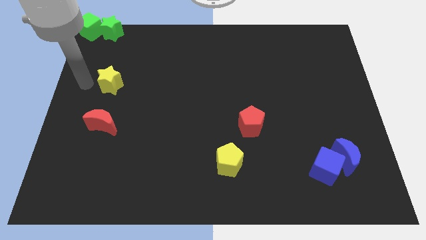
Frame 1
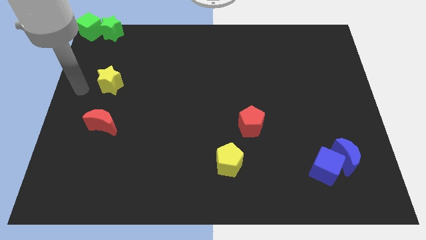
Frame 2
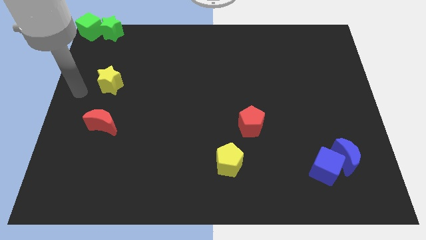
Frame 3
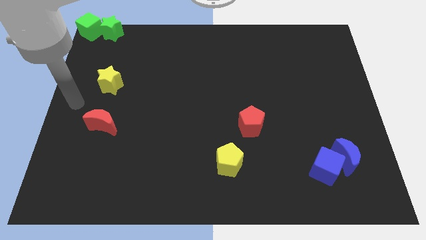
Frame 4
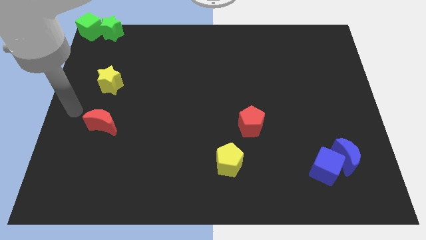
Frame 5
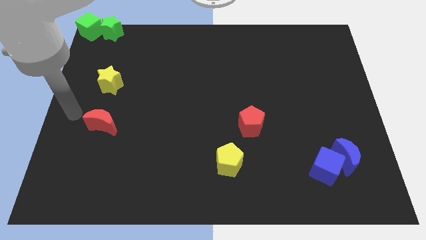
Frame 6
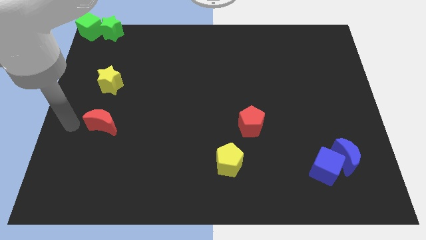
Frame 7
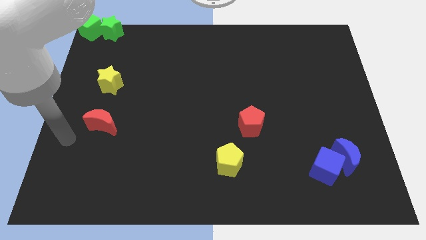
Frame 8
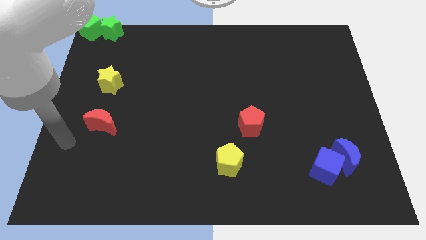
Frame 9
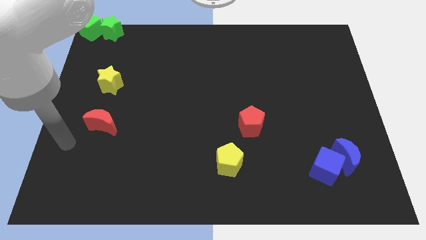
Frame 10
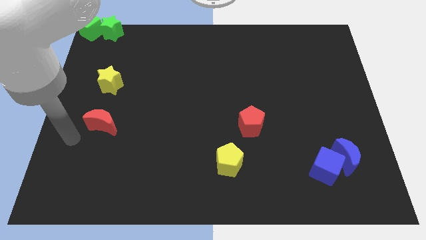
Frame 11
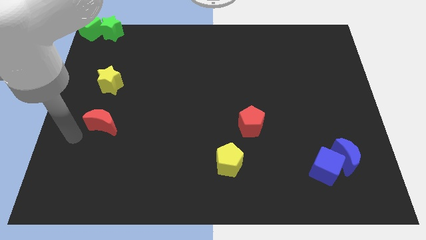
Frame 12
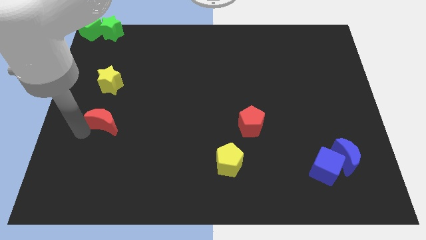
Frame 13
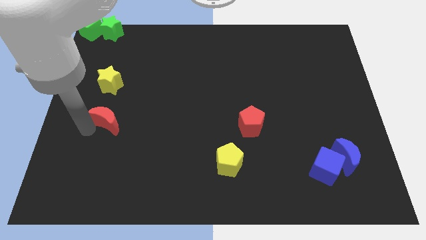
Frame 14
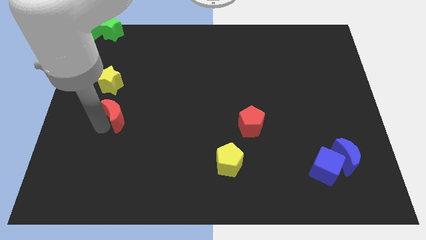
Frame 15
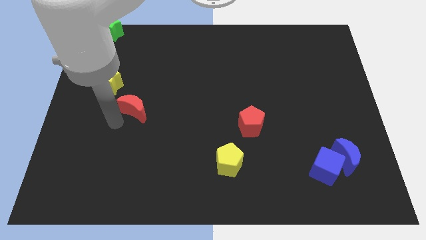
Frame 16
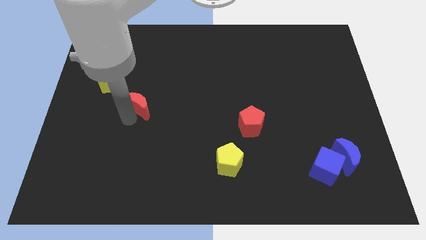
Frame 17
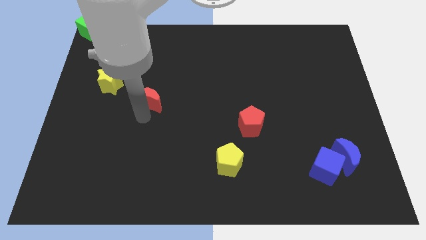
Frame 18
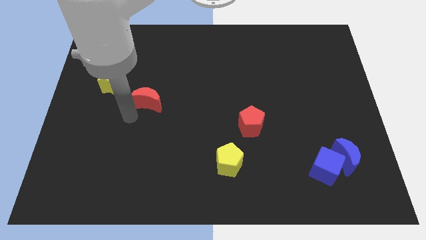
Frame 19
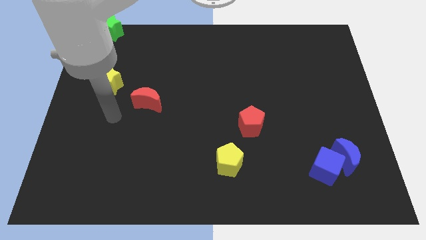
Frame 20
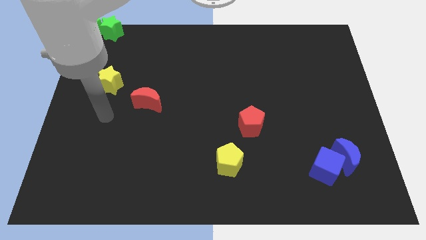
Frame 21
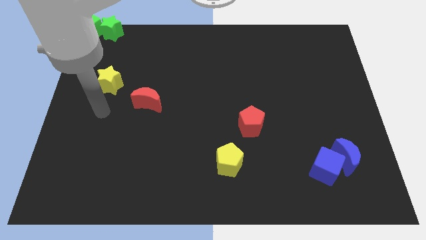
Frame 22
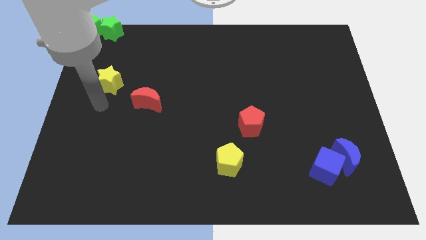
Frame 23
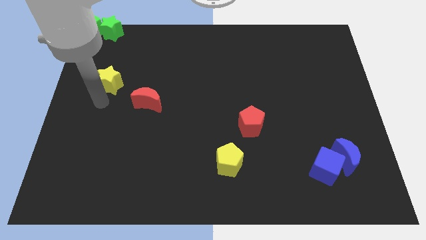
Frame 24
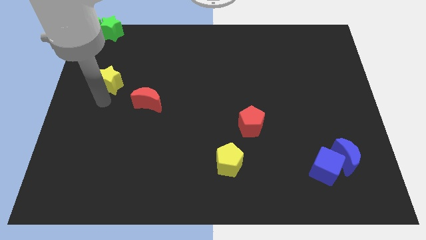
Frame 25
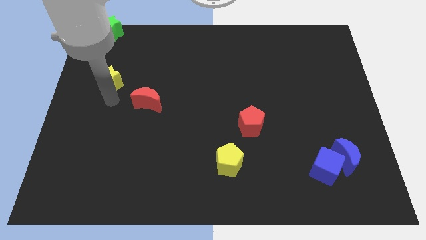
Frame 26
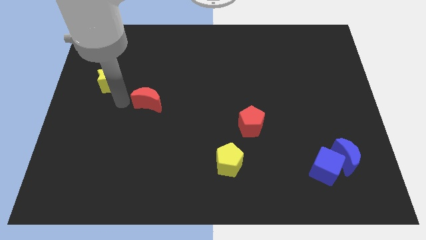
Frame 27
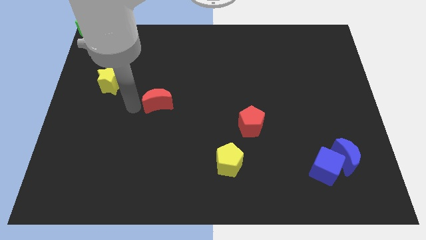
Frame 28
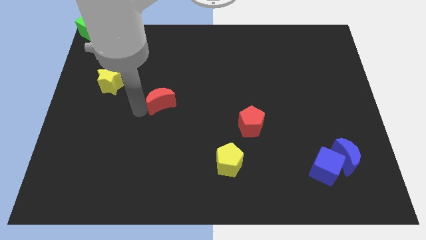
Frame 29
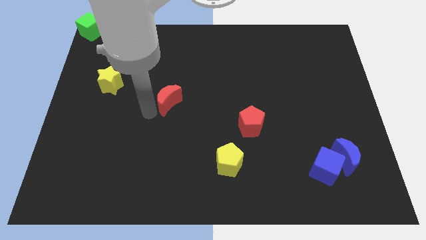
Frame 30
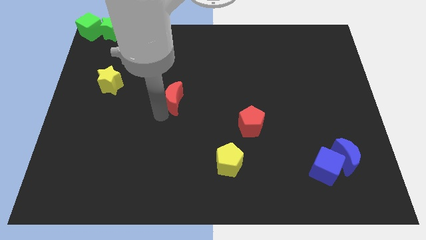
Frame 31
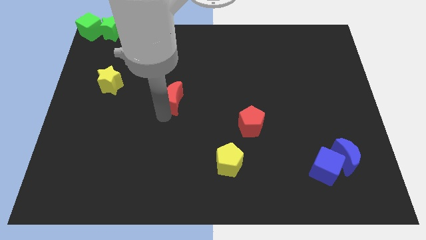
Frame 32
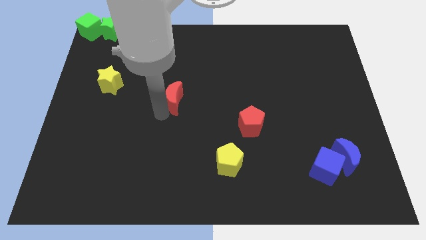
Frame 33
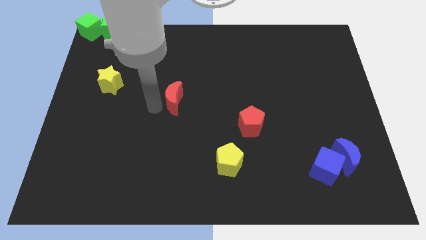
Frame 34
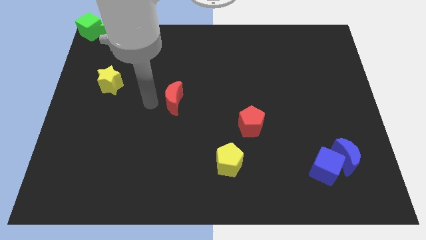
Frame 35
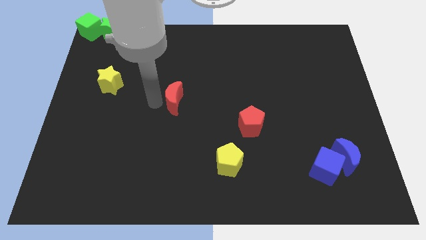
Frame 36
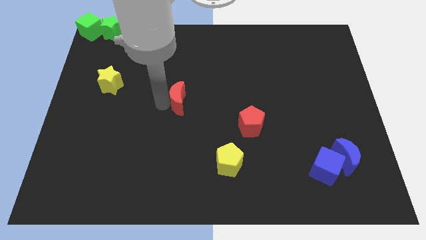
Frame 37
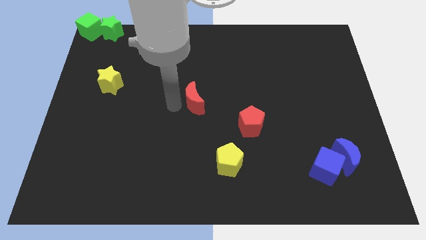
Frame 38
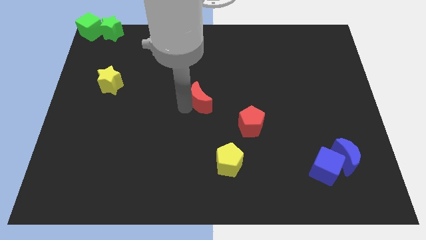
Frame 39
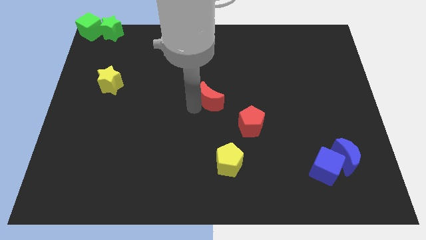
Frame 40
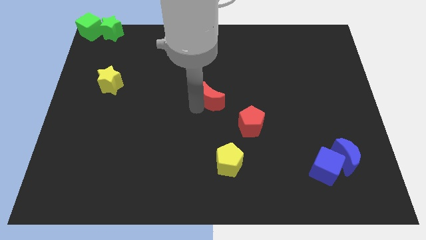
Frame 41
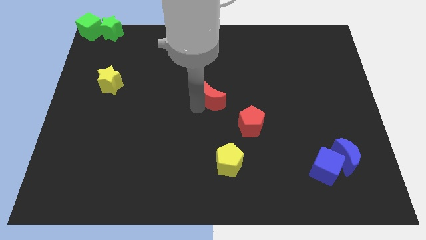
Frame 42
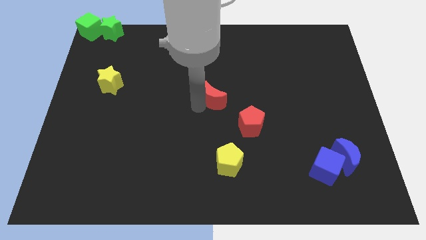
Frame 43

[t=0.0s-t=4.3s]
push the red crescent to the center of the board

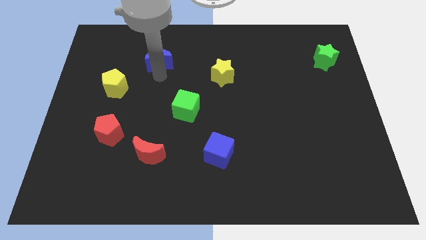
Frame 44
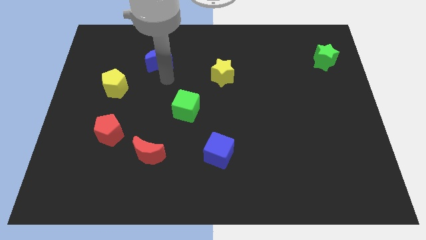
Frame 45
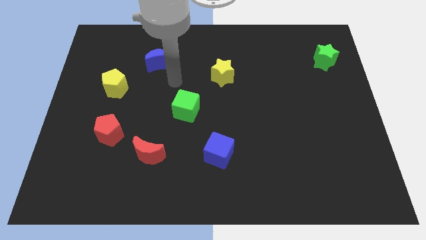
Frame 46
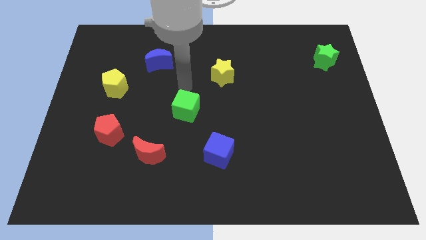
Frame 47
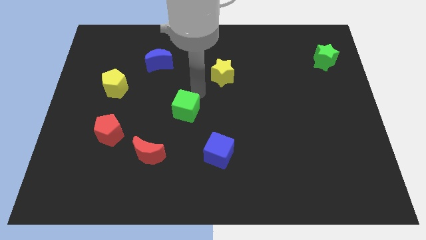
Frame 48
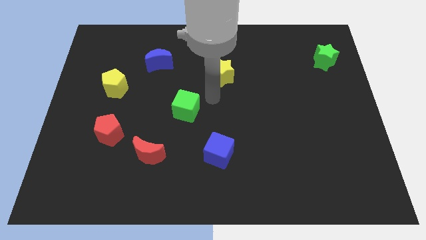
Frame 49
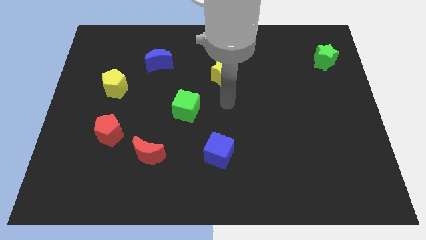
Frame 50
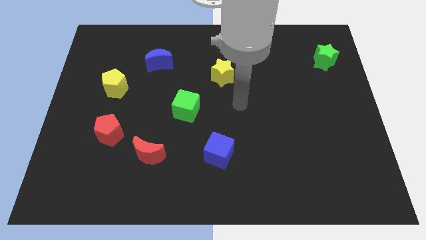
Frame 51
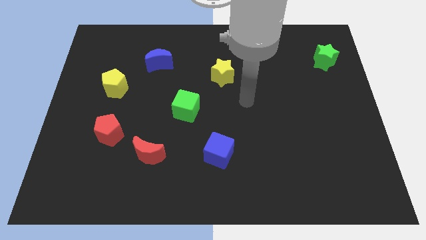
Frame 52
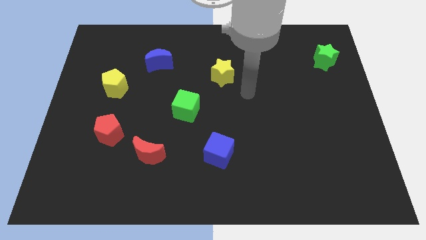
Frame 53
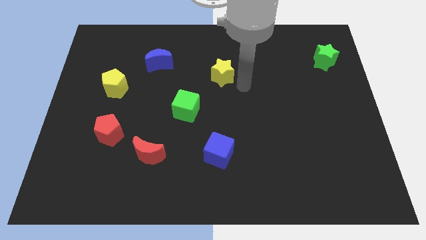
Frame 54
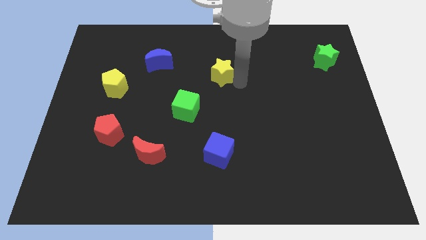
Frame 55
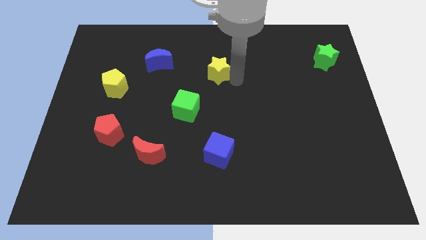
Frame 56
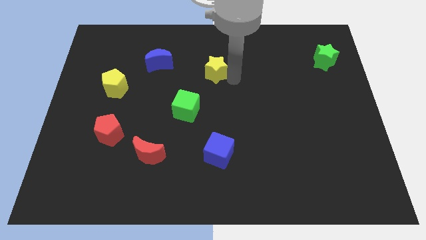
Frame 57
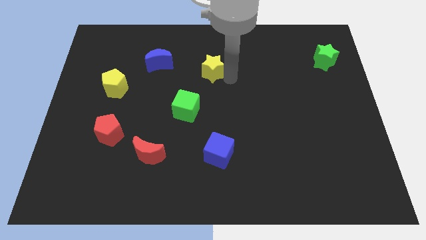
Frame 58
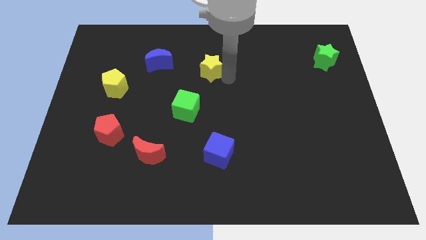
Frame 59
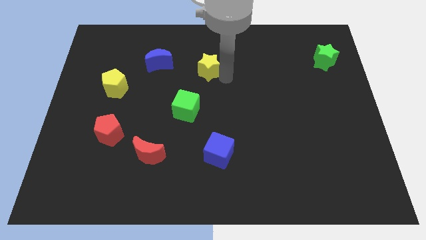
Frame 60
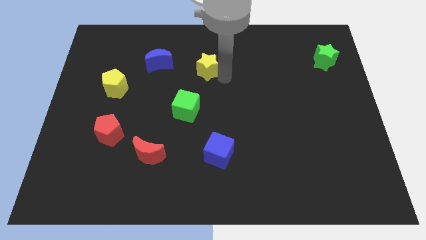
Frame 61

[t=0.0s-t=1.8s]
push the yellow star diagonally above the green cube

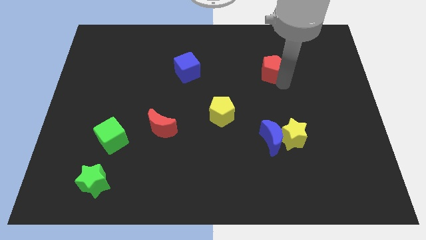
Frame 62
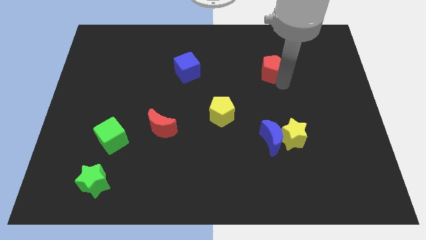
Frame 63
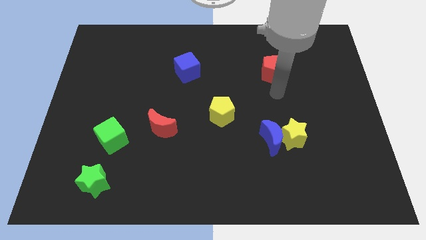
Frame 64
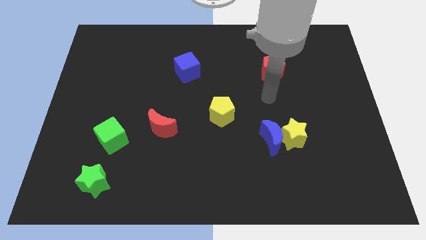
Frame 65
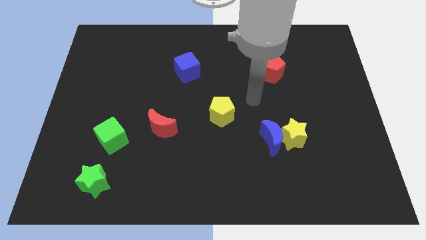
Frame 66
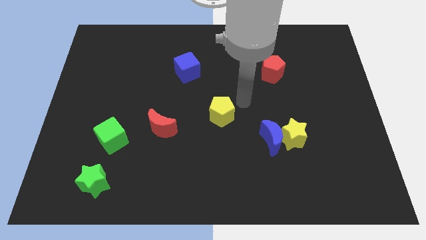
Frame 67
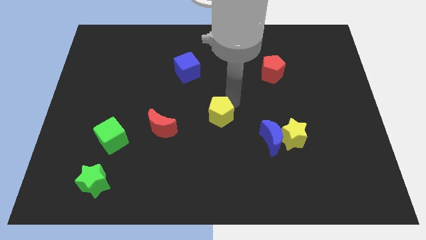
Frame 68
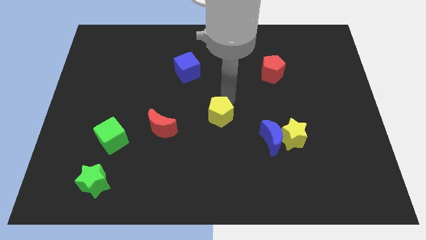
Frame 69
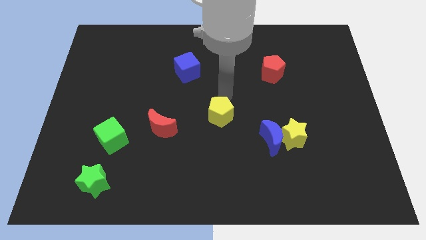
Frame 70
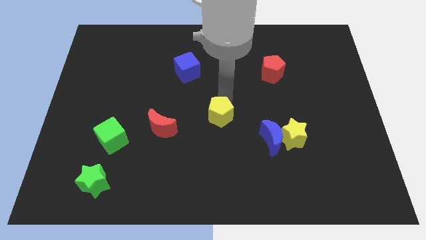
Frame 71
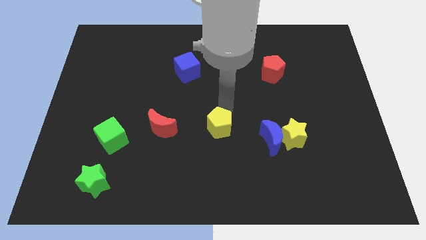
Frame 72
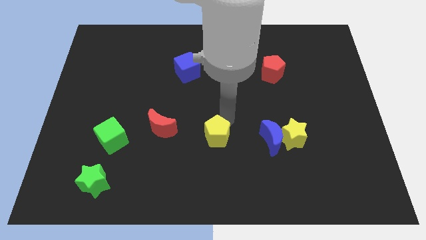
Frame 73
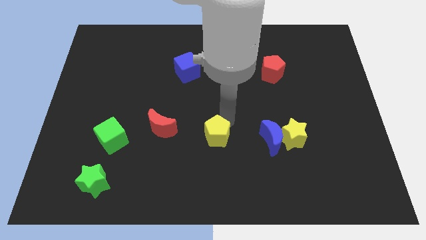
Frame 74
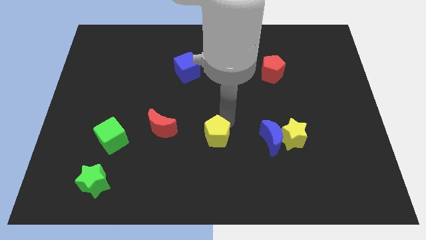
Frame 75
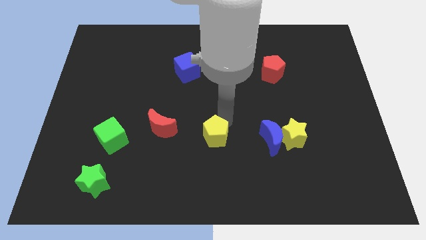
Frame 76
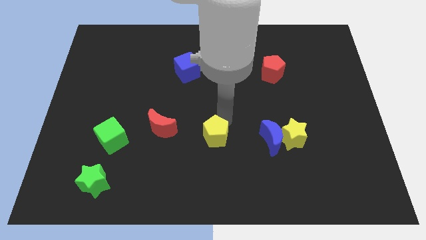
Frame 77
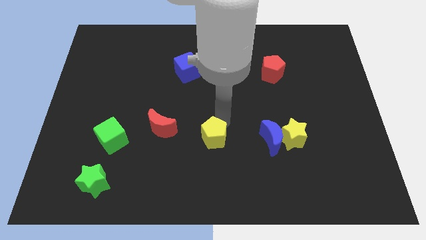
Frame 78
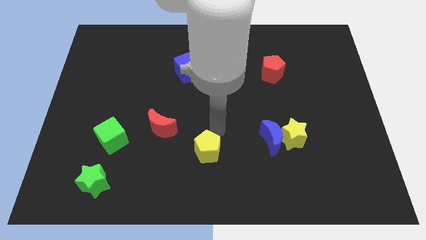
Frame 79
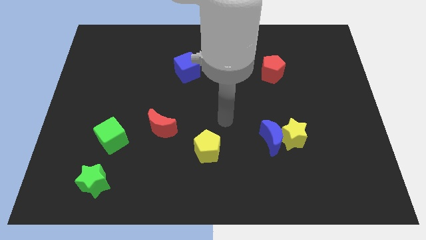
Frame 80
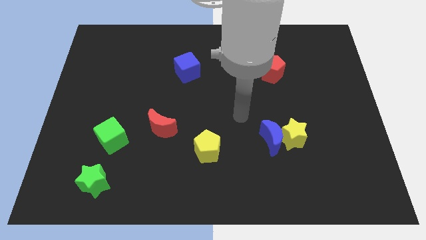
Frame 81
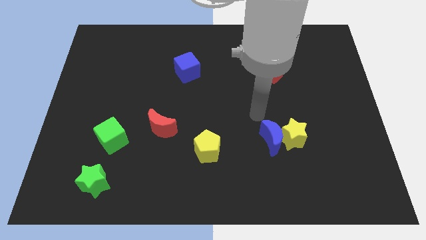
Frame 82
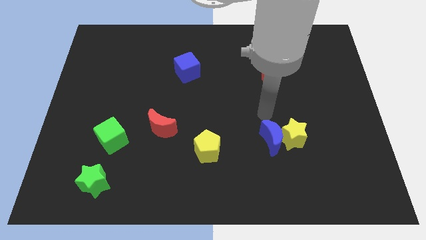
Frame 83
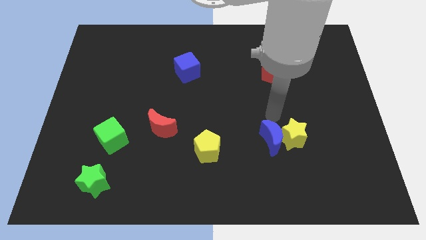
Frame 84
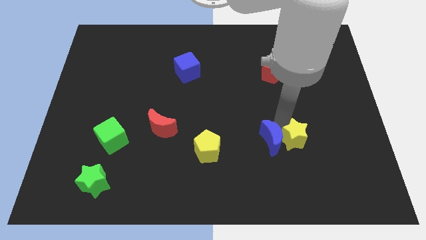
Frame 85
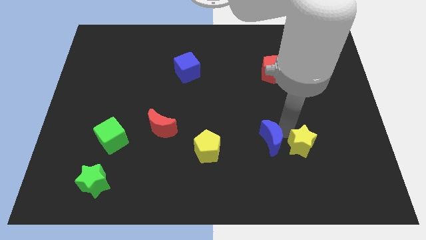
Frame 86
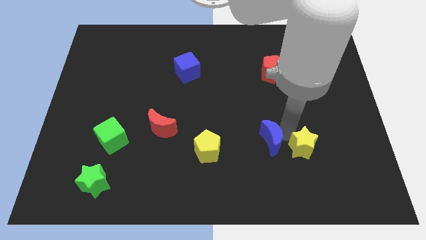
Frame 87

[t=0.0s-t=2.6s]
place yellow pentagon to the left of blue moon

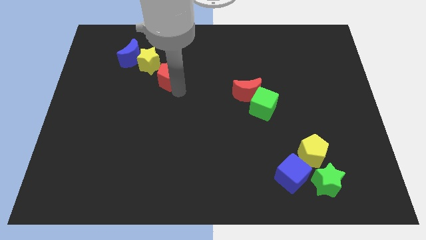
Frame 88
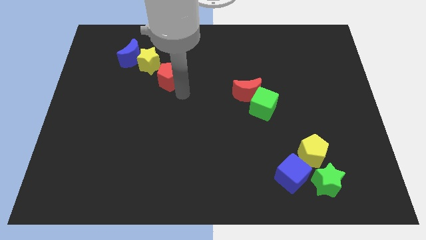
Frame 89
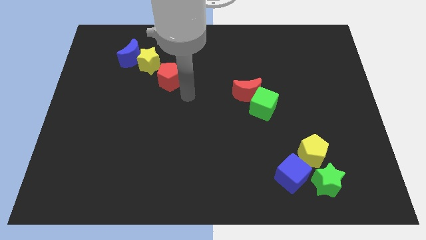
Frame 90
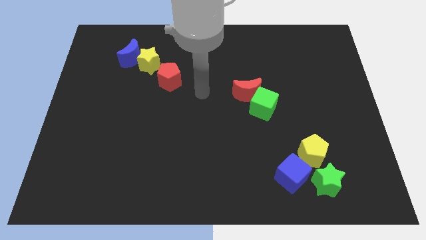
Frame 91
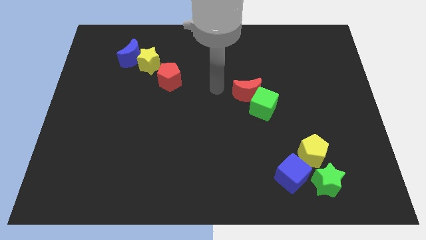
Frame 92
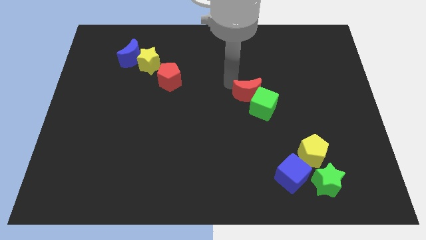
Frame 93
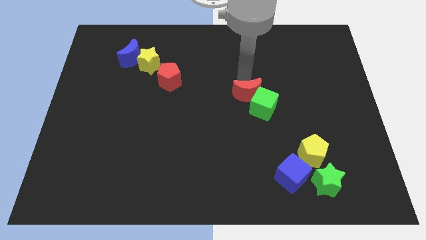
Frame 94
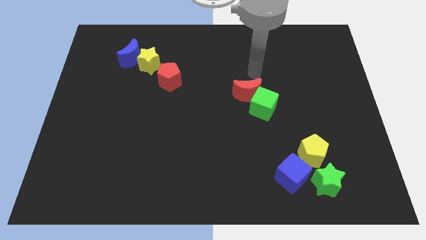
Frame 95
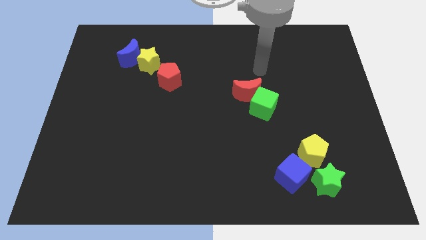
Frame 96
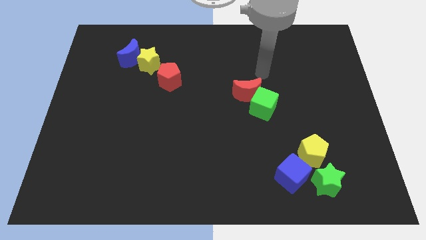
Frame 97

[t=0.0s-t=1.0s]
move the arm away from the red pentagon
